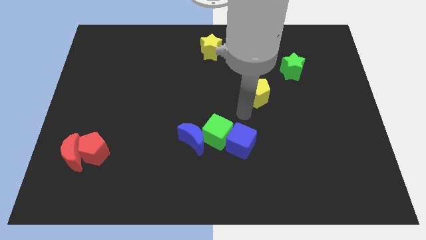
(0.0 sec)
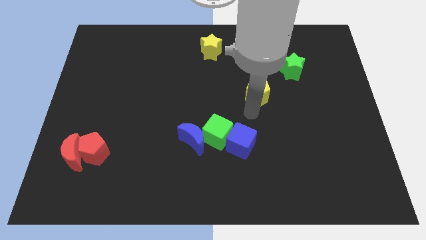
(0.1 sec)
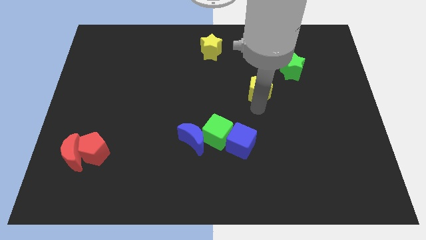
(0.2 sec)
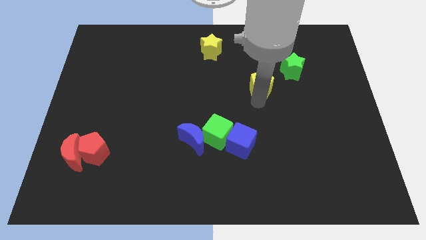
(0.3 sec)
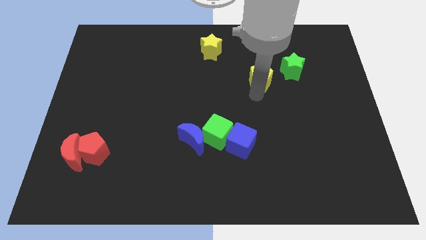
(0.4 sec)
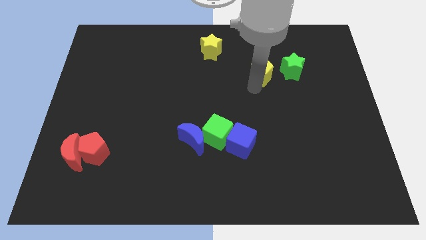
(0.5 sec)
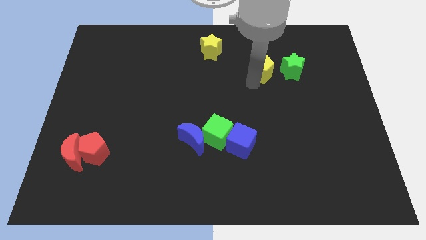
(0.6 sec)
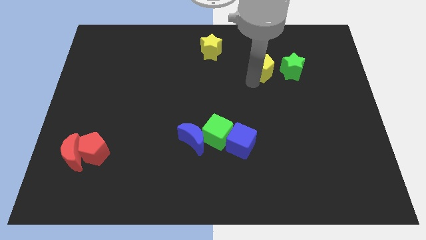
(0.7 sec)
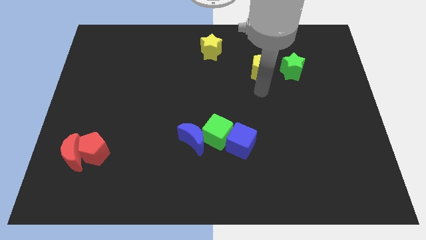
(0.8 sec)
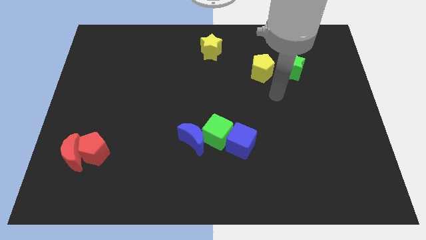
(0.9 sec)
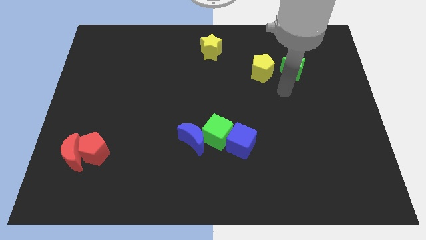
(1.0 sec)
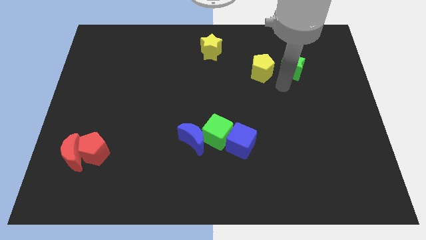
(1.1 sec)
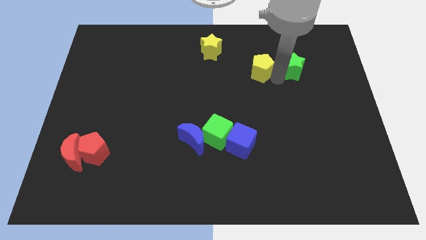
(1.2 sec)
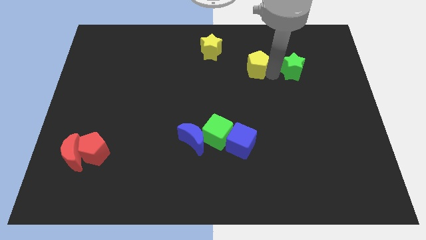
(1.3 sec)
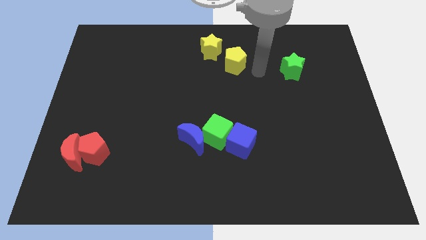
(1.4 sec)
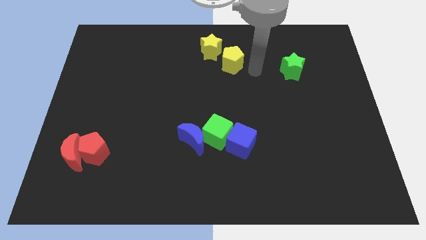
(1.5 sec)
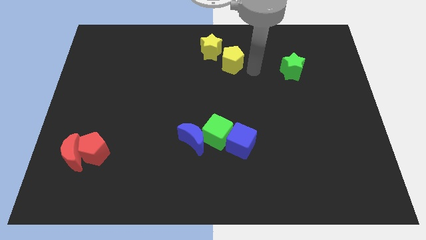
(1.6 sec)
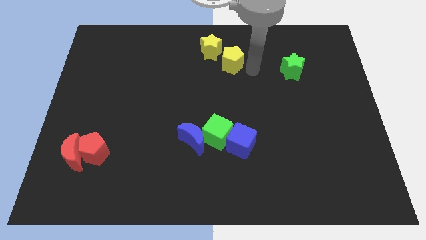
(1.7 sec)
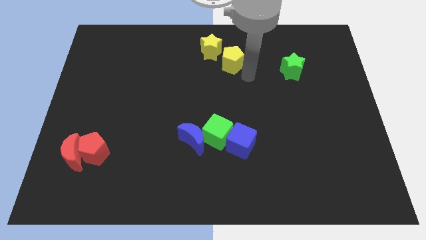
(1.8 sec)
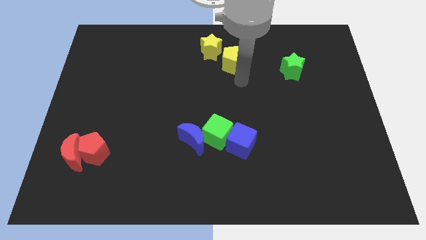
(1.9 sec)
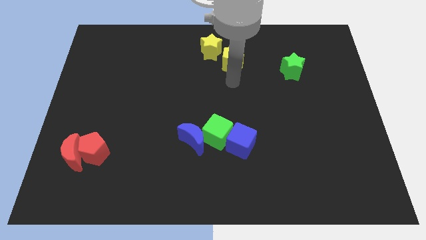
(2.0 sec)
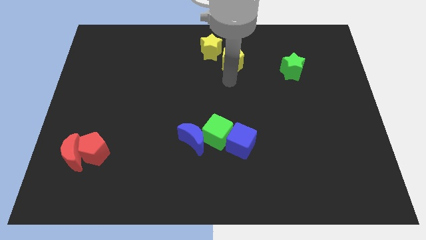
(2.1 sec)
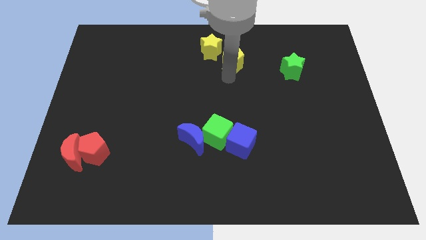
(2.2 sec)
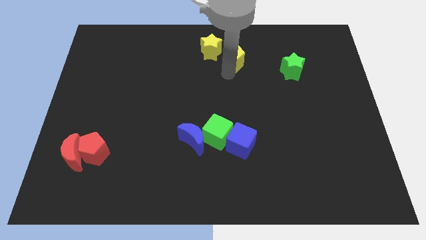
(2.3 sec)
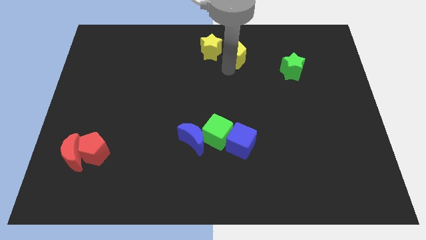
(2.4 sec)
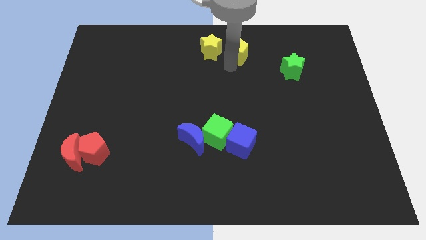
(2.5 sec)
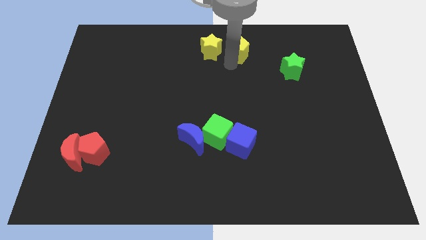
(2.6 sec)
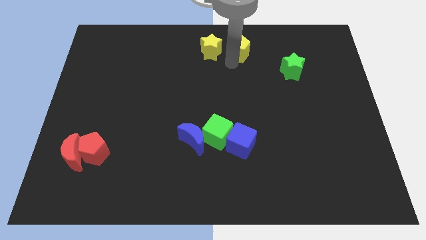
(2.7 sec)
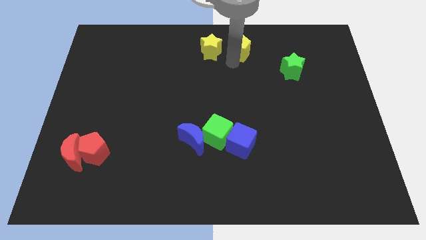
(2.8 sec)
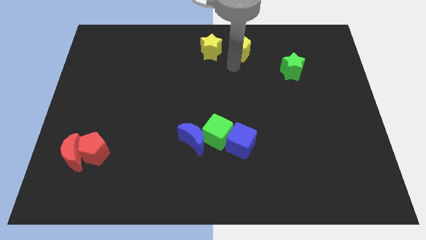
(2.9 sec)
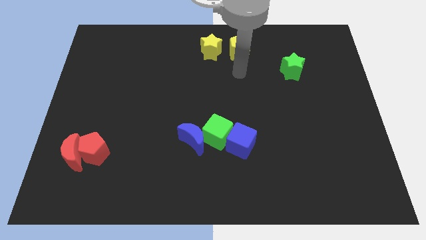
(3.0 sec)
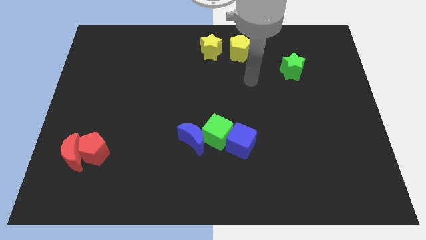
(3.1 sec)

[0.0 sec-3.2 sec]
move the yellow pentagon towards the right side of the yellow star

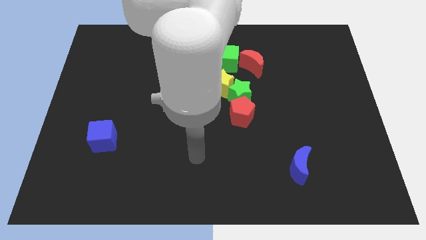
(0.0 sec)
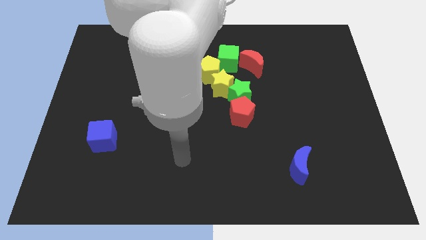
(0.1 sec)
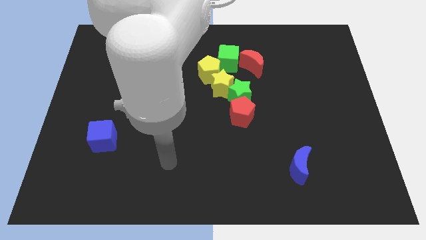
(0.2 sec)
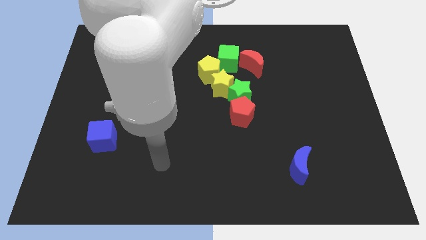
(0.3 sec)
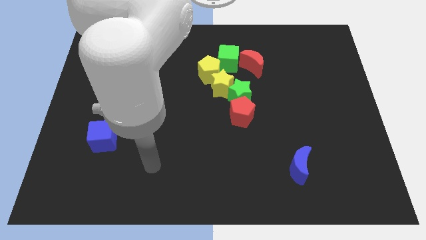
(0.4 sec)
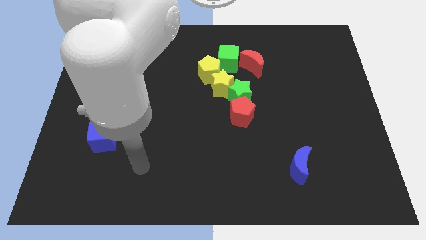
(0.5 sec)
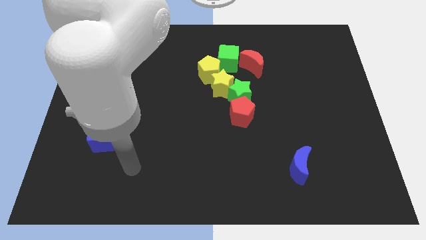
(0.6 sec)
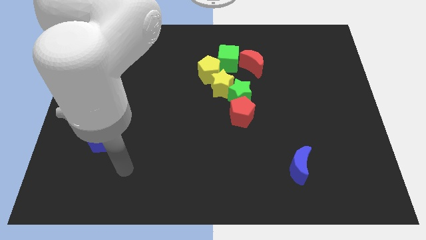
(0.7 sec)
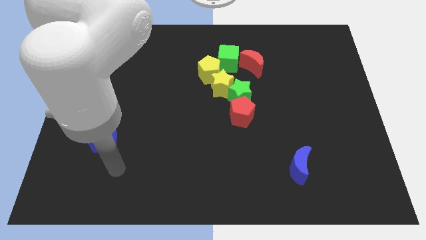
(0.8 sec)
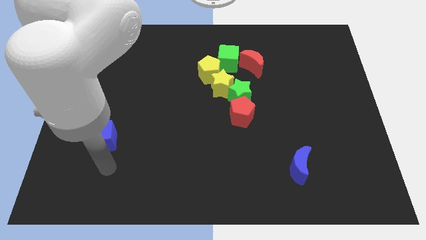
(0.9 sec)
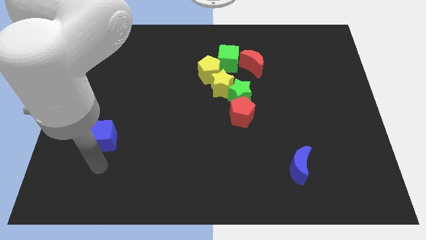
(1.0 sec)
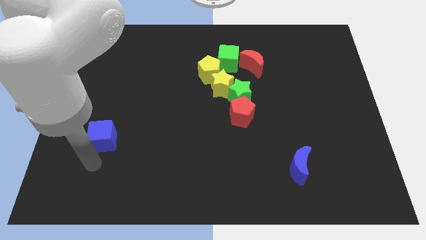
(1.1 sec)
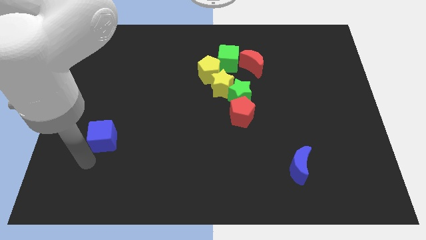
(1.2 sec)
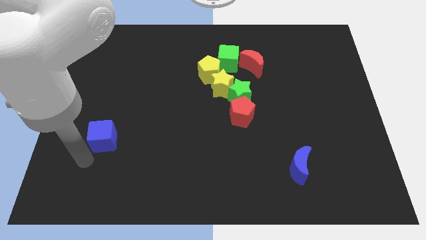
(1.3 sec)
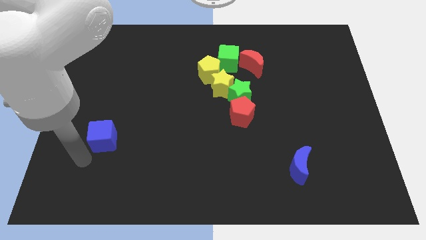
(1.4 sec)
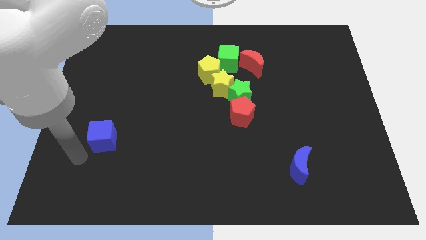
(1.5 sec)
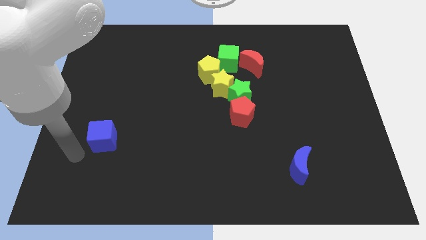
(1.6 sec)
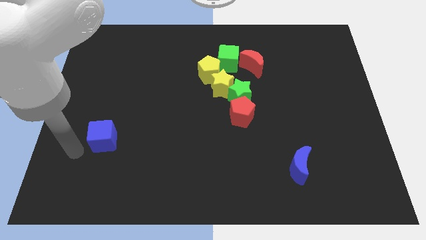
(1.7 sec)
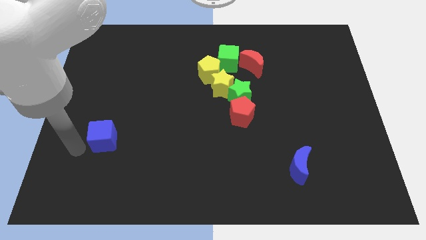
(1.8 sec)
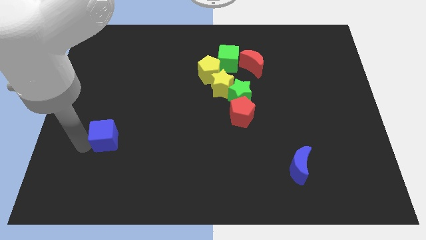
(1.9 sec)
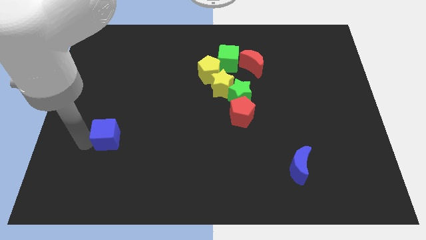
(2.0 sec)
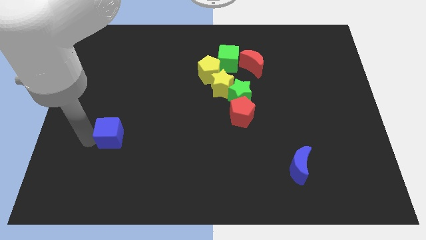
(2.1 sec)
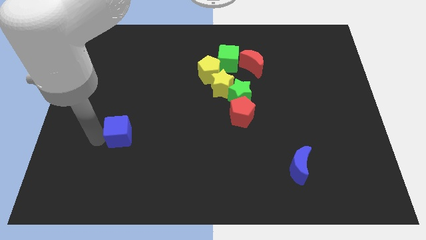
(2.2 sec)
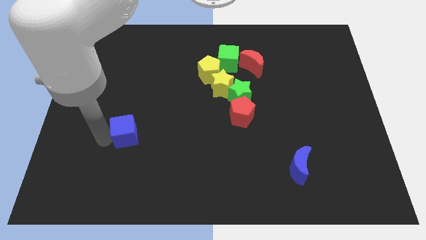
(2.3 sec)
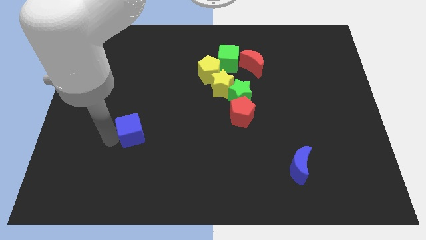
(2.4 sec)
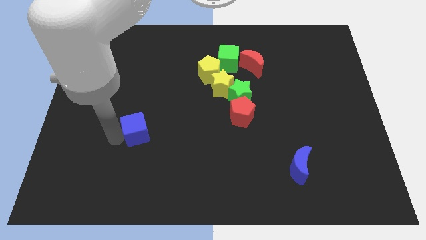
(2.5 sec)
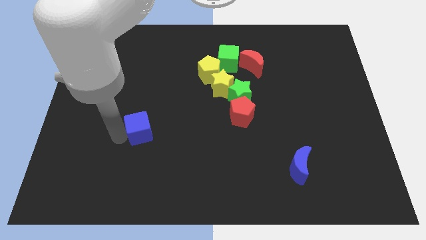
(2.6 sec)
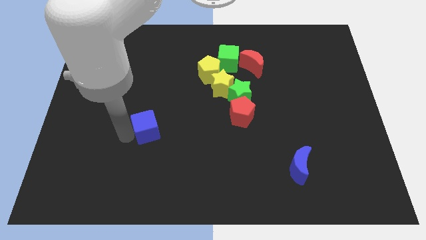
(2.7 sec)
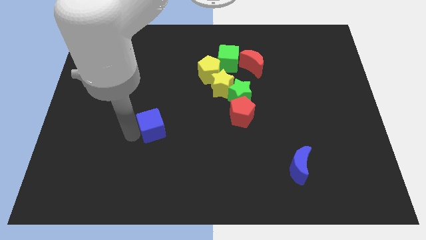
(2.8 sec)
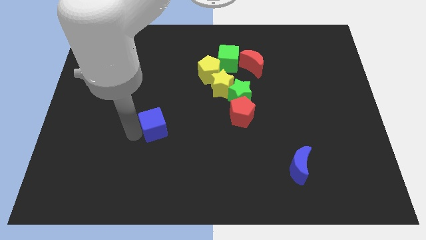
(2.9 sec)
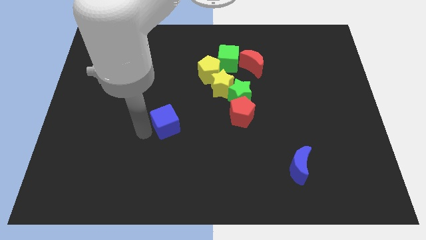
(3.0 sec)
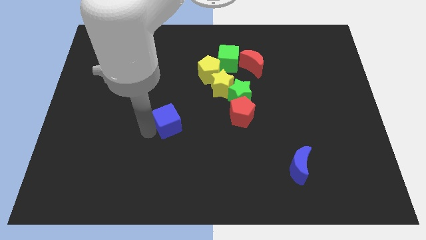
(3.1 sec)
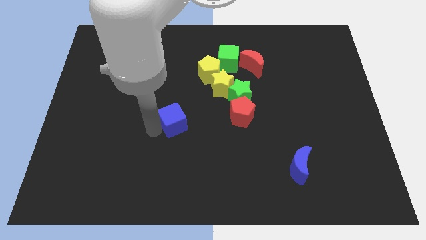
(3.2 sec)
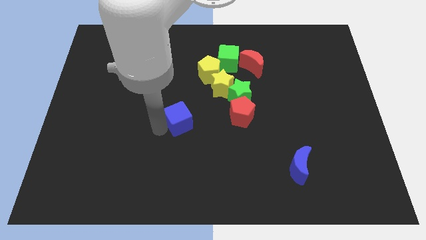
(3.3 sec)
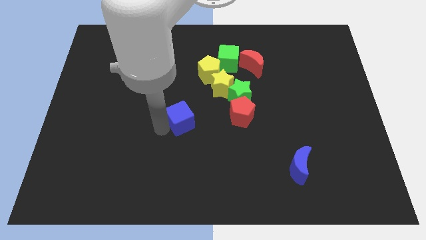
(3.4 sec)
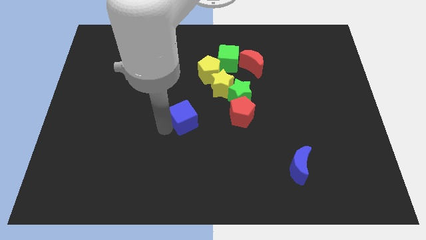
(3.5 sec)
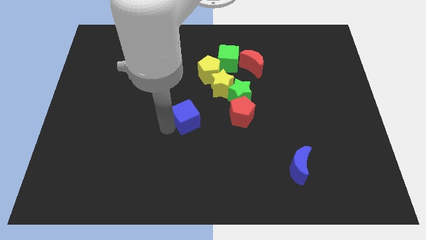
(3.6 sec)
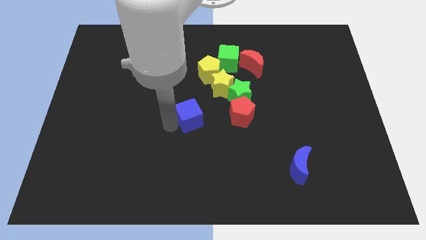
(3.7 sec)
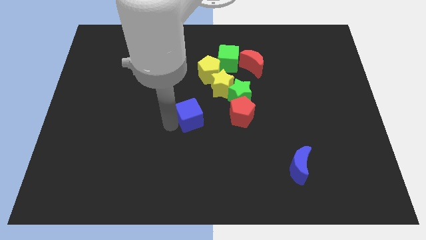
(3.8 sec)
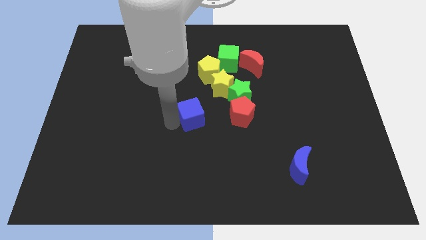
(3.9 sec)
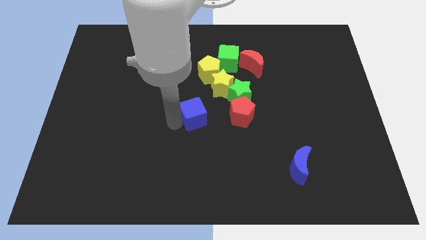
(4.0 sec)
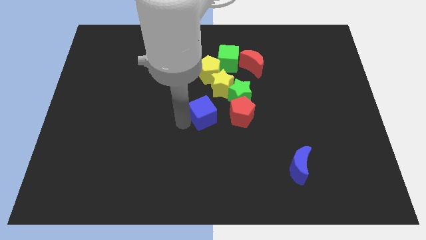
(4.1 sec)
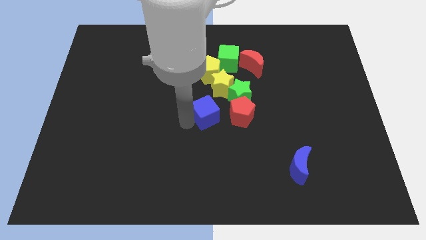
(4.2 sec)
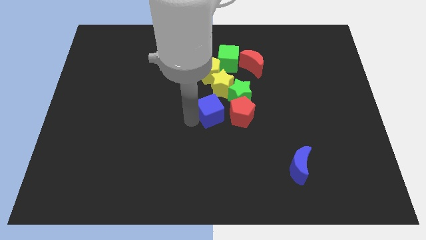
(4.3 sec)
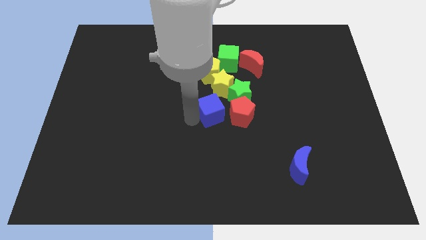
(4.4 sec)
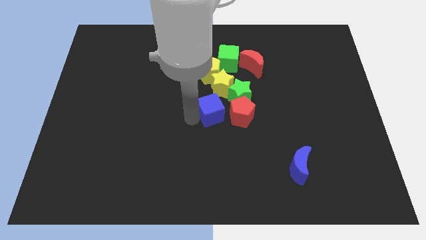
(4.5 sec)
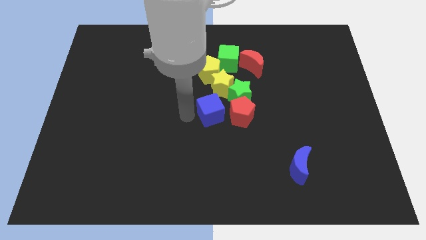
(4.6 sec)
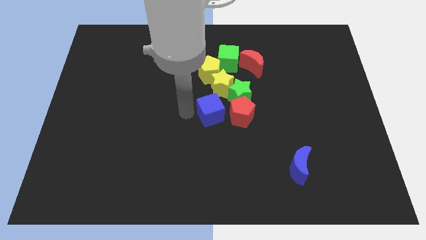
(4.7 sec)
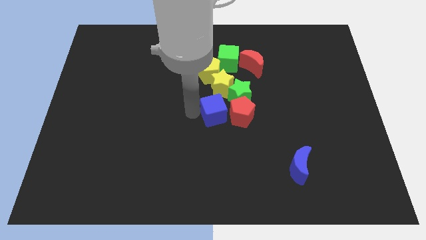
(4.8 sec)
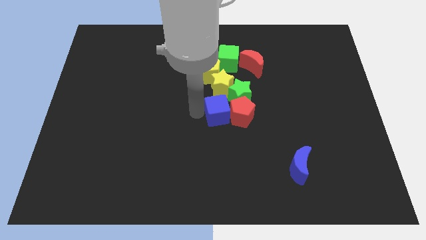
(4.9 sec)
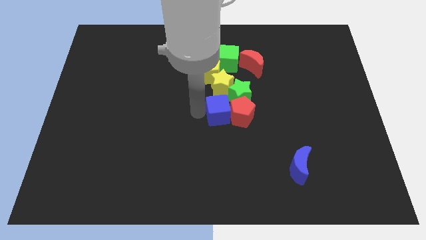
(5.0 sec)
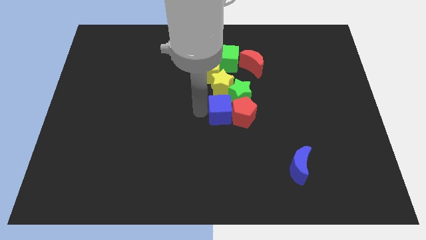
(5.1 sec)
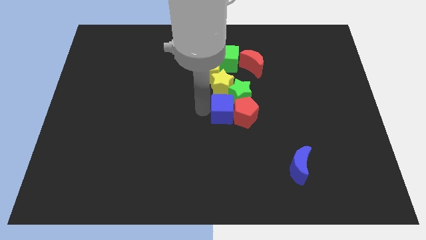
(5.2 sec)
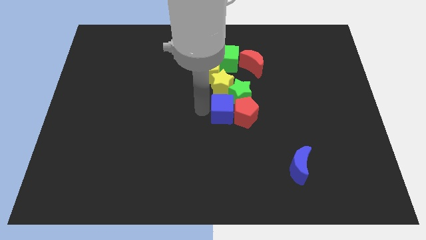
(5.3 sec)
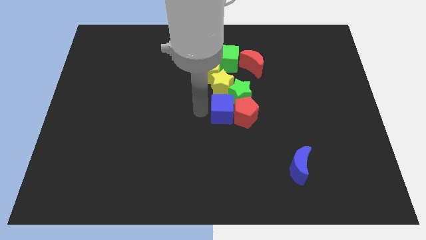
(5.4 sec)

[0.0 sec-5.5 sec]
move the blue cube into the left side of the red pentagon

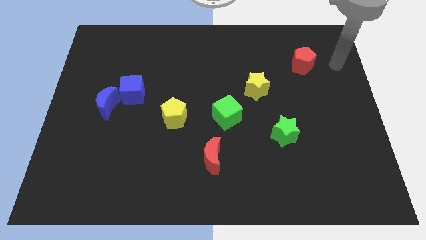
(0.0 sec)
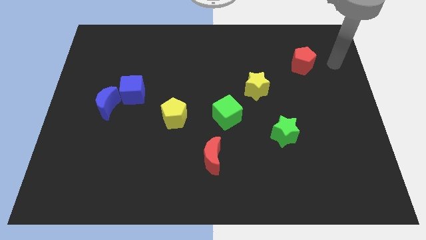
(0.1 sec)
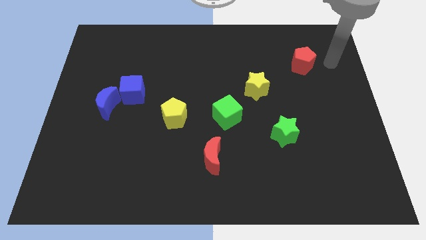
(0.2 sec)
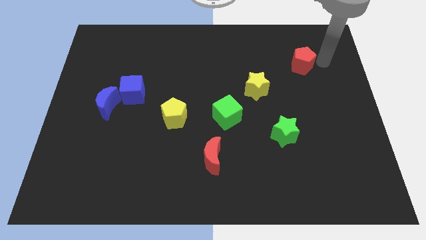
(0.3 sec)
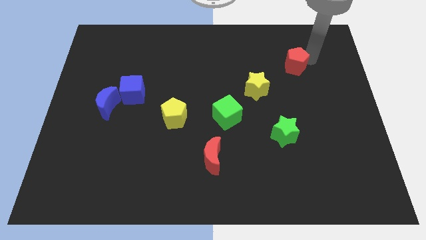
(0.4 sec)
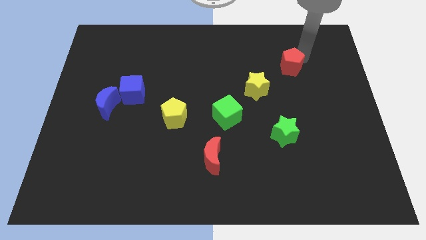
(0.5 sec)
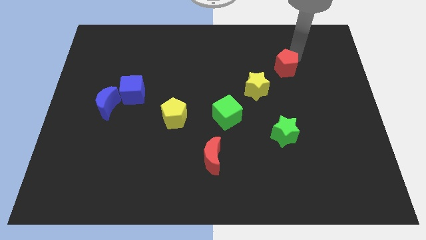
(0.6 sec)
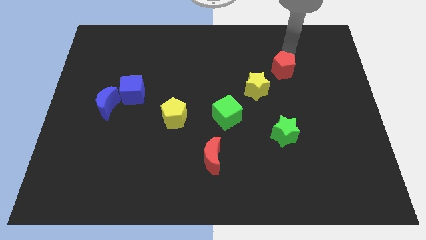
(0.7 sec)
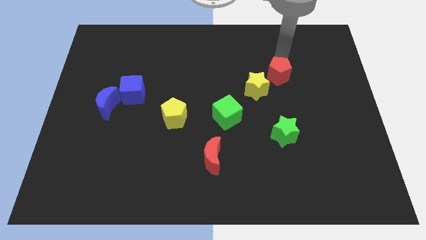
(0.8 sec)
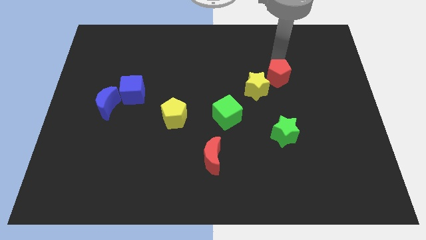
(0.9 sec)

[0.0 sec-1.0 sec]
move red pentagon towards yellow star
